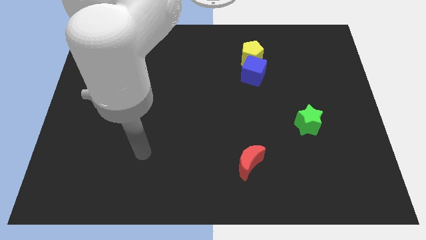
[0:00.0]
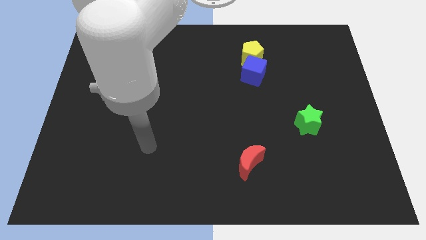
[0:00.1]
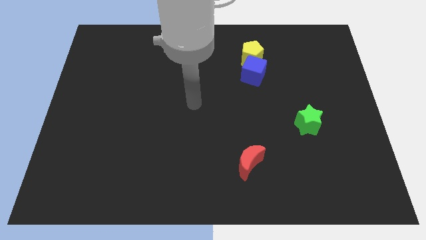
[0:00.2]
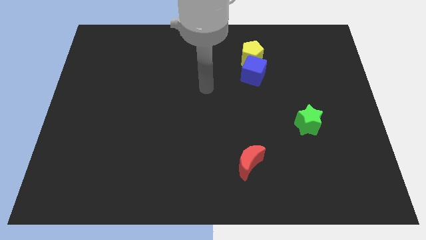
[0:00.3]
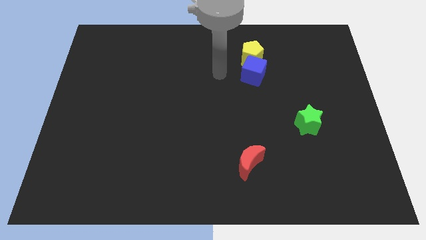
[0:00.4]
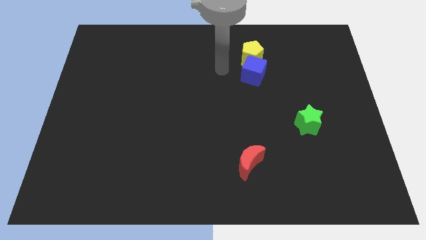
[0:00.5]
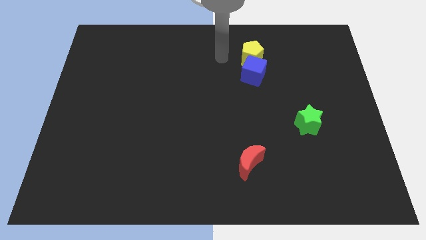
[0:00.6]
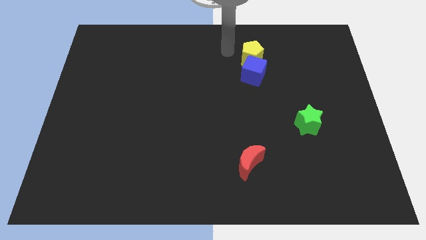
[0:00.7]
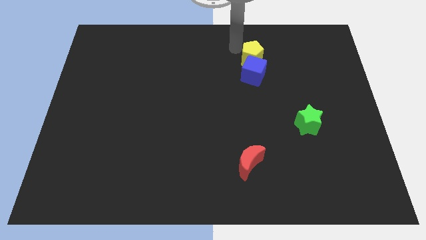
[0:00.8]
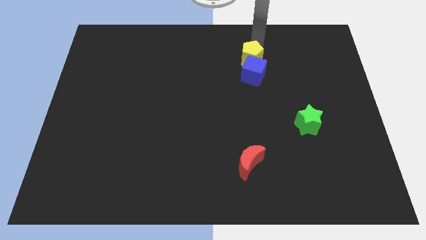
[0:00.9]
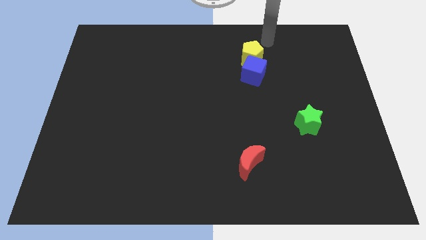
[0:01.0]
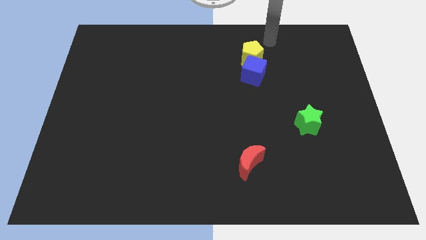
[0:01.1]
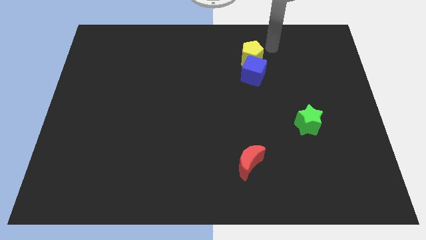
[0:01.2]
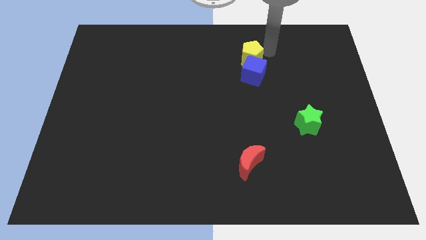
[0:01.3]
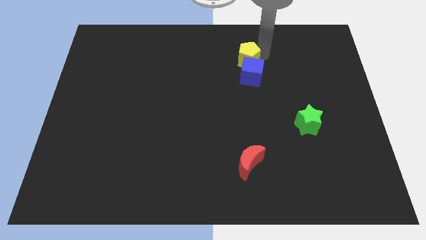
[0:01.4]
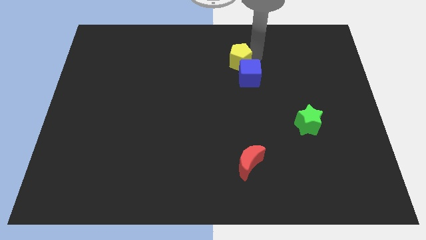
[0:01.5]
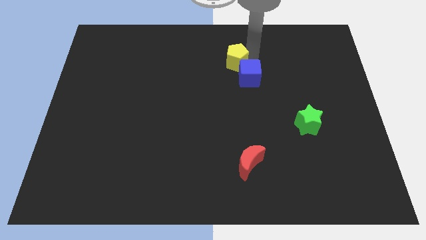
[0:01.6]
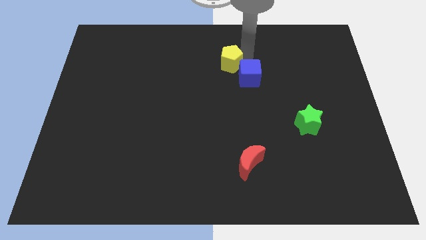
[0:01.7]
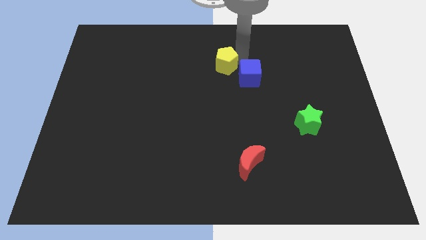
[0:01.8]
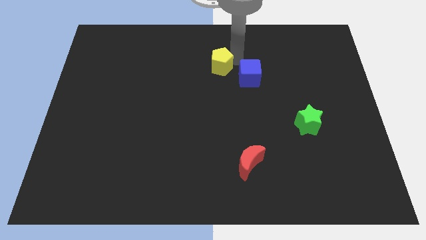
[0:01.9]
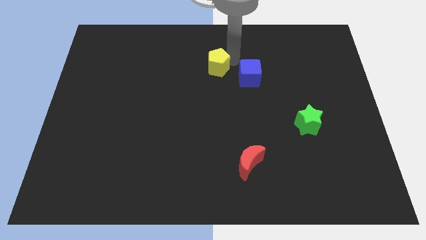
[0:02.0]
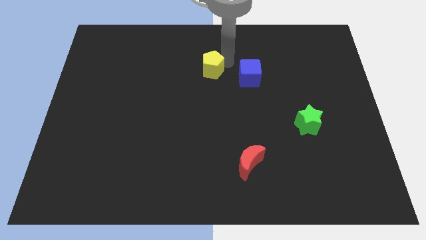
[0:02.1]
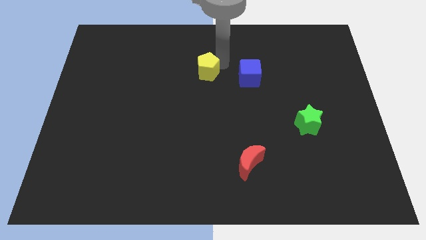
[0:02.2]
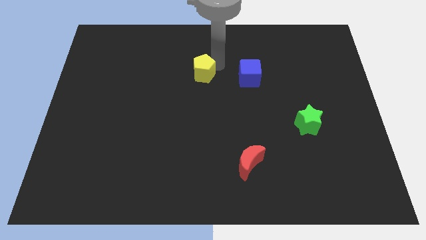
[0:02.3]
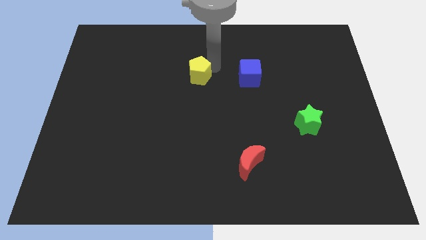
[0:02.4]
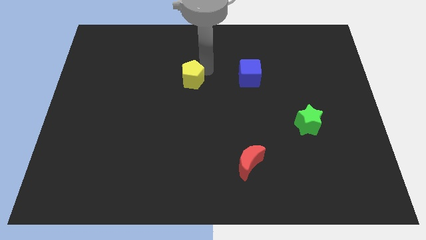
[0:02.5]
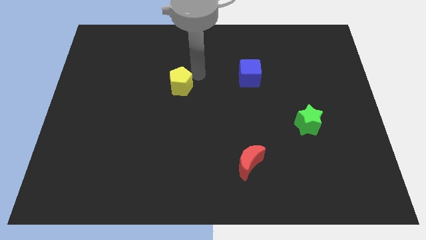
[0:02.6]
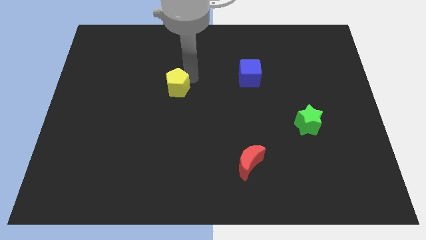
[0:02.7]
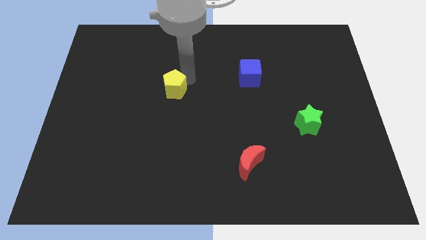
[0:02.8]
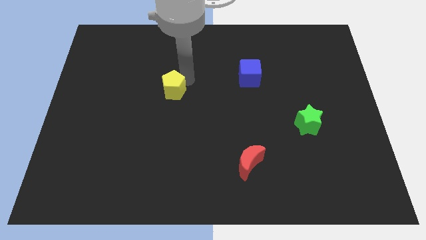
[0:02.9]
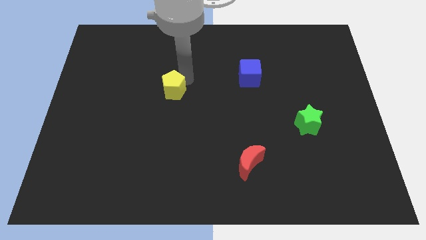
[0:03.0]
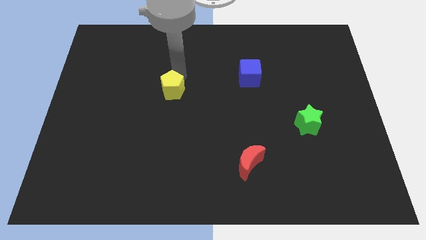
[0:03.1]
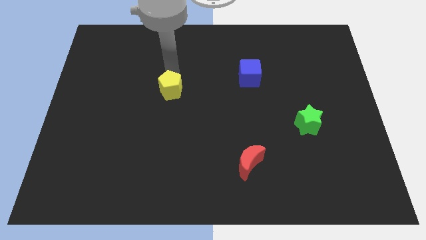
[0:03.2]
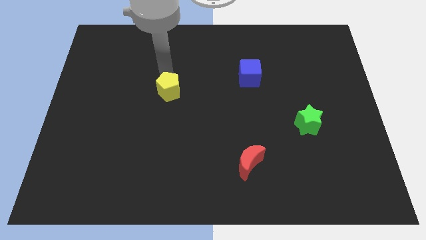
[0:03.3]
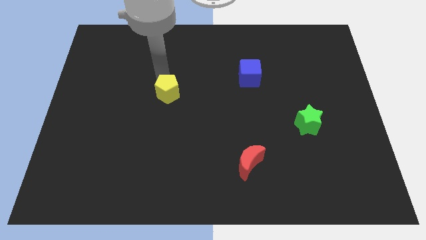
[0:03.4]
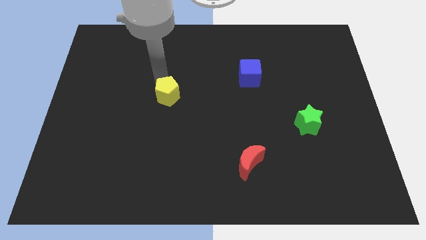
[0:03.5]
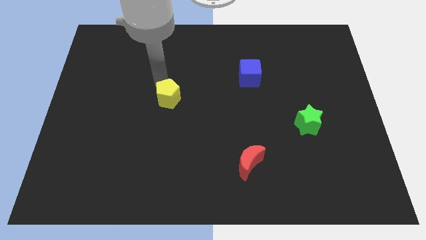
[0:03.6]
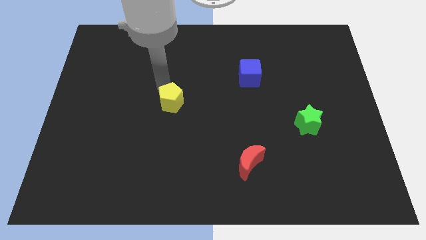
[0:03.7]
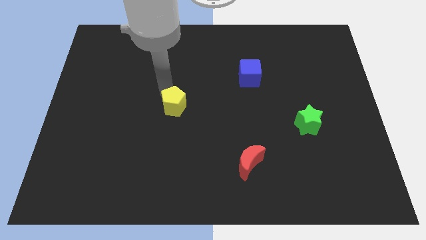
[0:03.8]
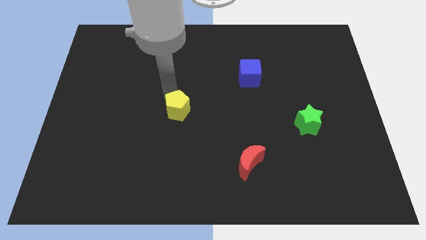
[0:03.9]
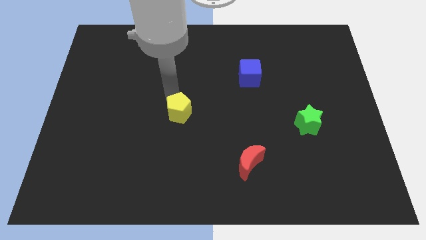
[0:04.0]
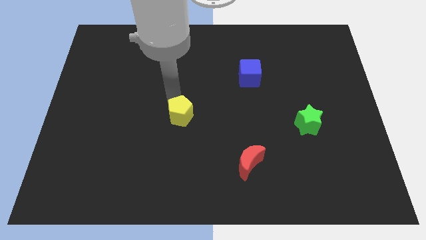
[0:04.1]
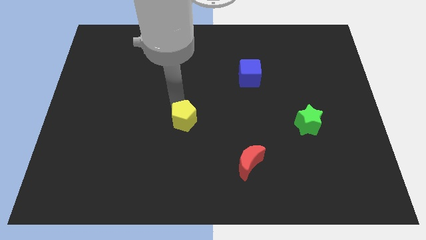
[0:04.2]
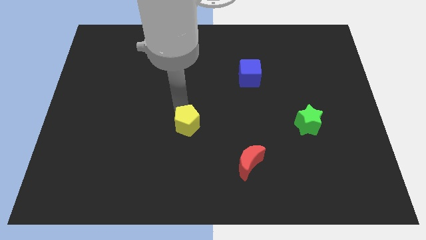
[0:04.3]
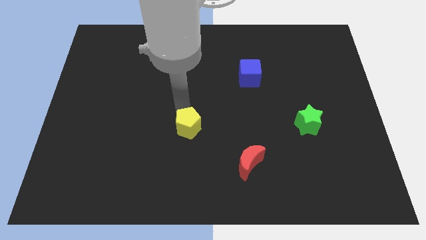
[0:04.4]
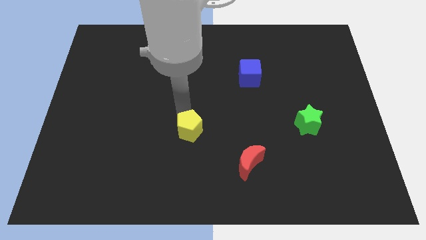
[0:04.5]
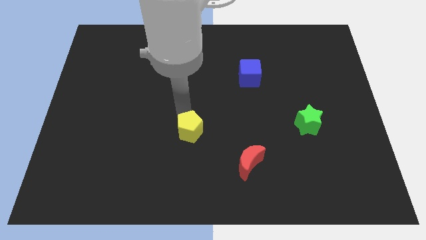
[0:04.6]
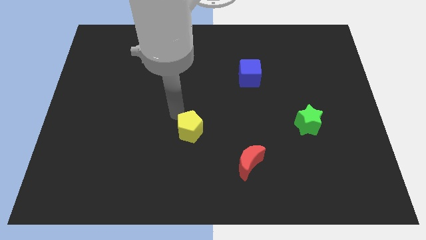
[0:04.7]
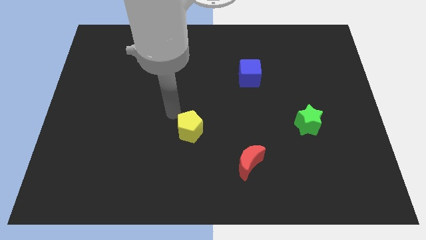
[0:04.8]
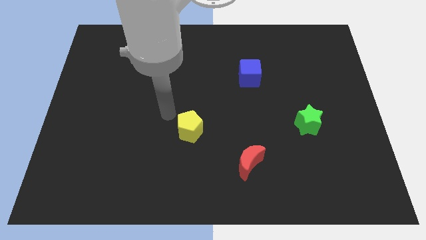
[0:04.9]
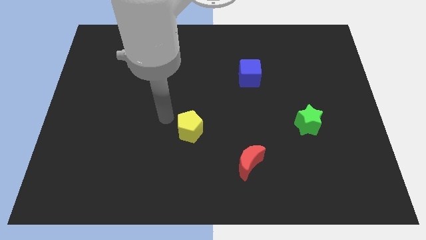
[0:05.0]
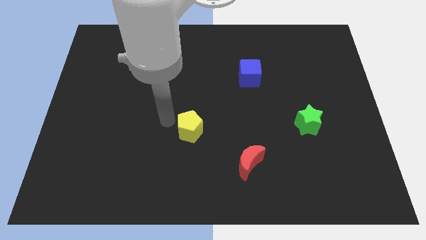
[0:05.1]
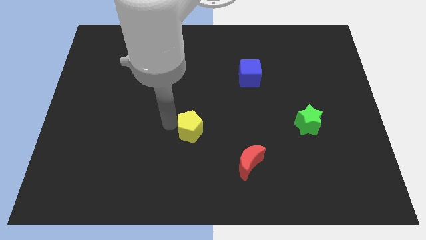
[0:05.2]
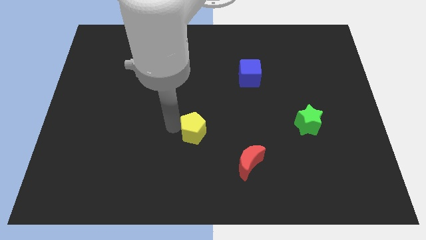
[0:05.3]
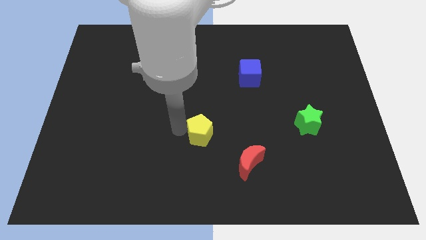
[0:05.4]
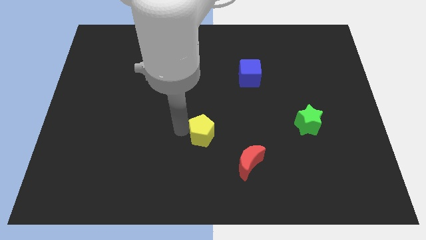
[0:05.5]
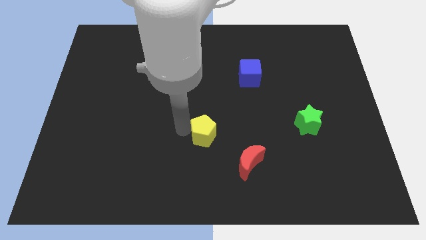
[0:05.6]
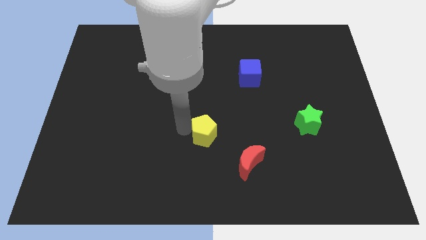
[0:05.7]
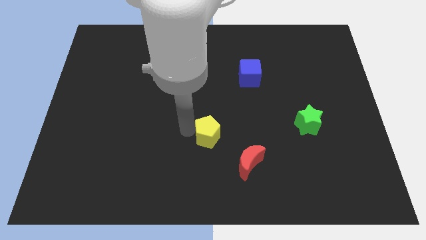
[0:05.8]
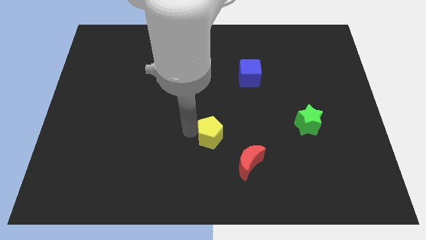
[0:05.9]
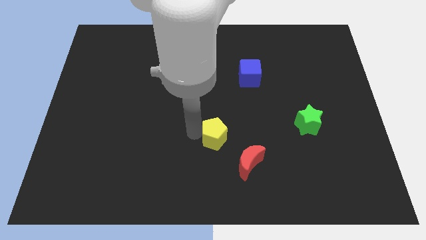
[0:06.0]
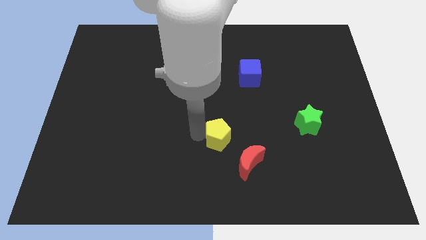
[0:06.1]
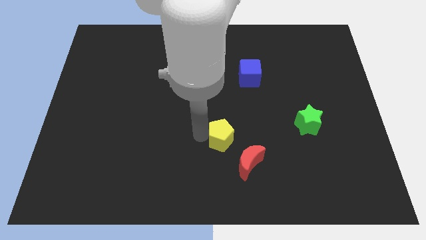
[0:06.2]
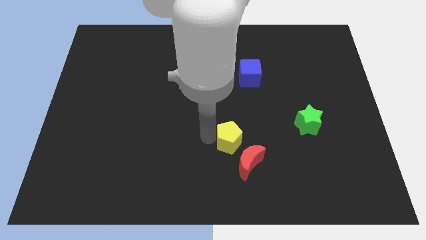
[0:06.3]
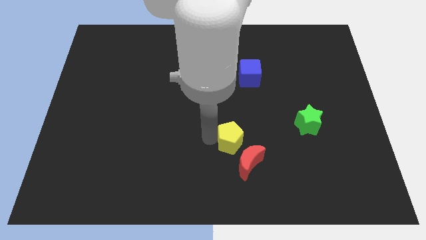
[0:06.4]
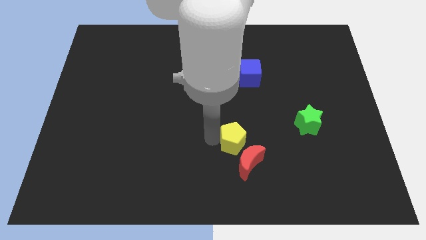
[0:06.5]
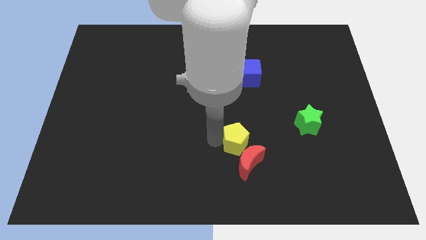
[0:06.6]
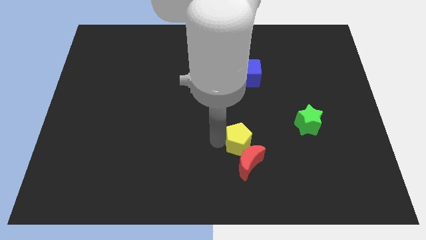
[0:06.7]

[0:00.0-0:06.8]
push the yellow block close to the red moon

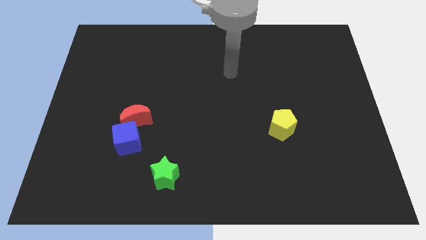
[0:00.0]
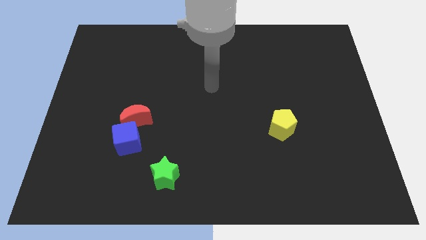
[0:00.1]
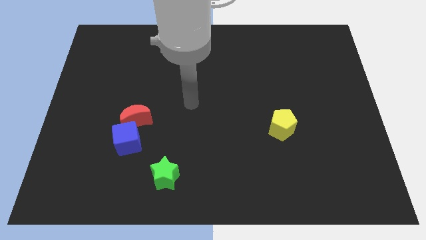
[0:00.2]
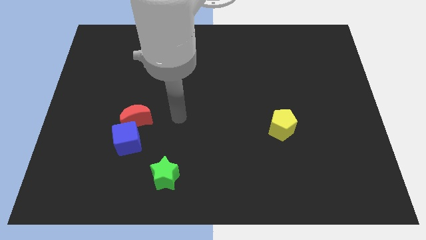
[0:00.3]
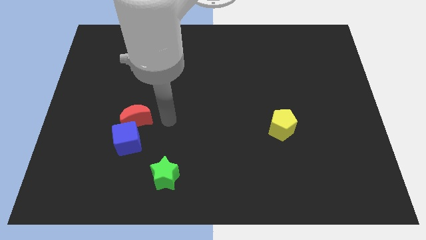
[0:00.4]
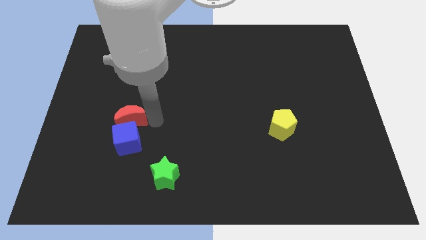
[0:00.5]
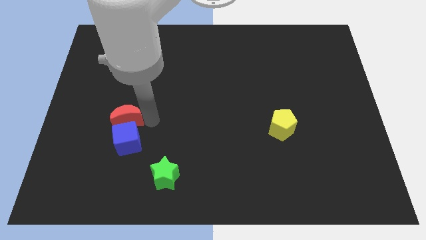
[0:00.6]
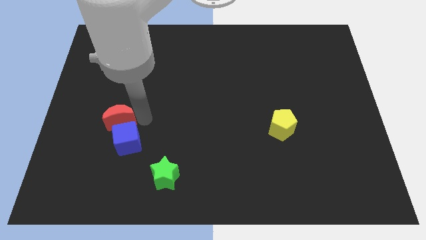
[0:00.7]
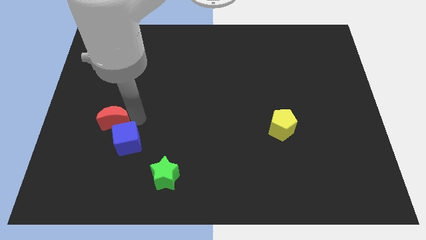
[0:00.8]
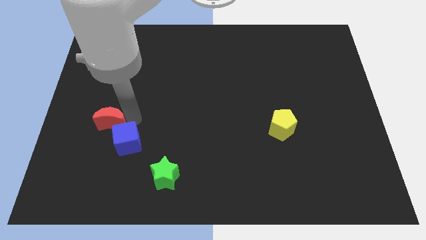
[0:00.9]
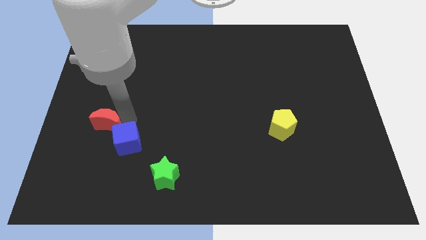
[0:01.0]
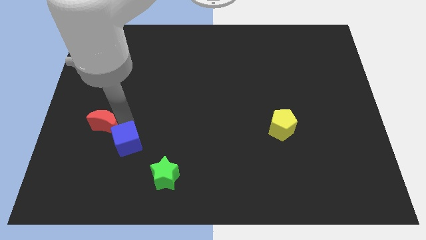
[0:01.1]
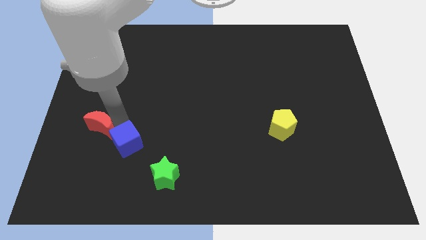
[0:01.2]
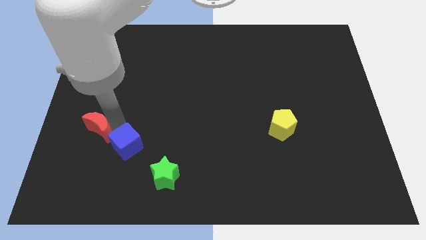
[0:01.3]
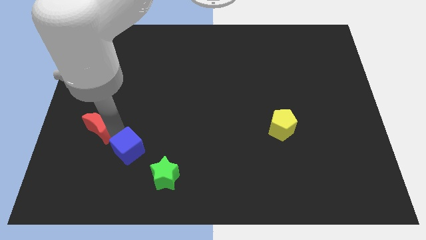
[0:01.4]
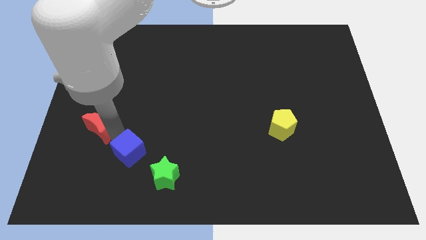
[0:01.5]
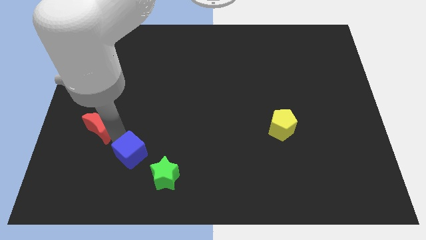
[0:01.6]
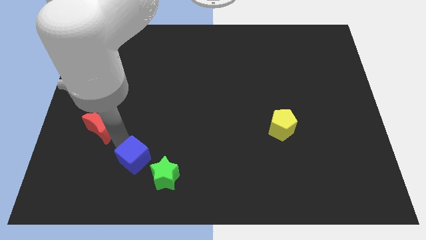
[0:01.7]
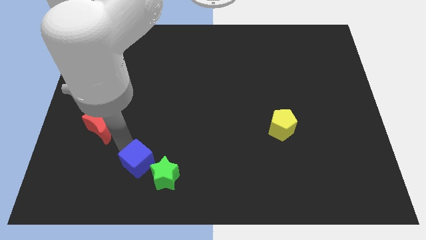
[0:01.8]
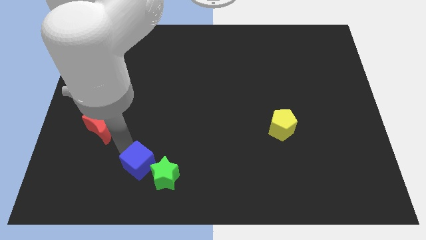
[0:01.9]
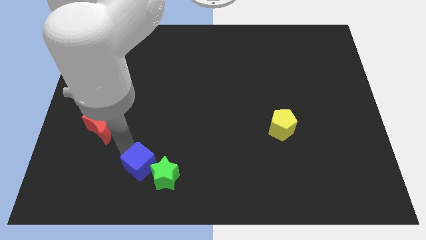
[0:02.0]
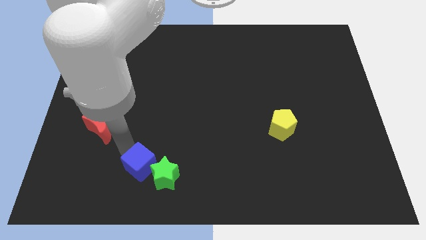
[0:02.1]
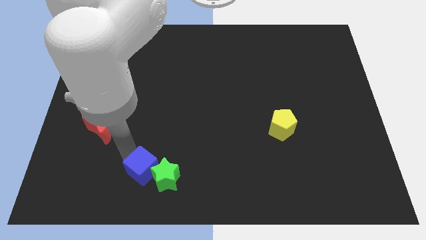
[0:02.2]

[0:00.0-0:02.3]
slide the cube close to the green star
